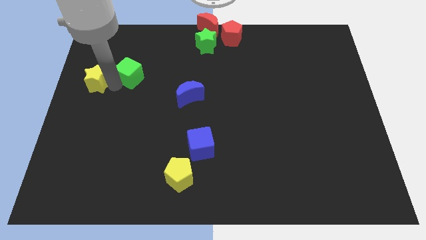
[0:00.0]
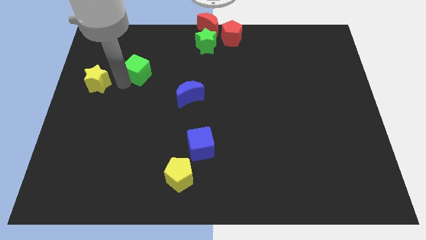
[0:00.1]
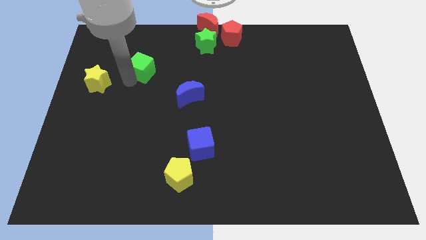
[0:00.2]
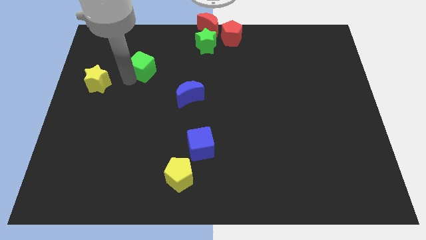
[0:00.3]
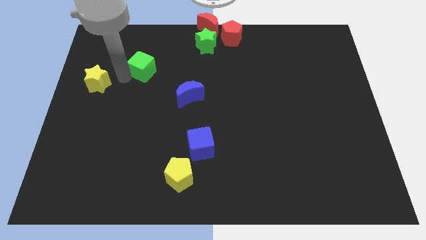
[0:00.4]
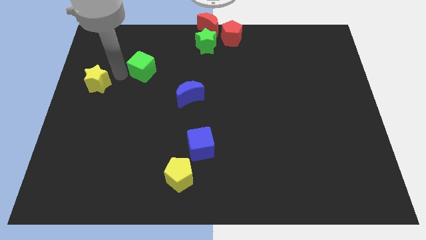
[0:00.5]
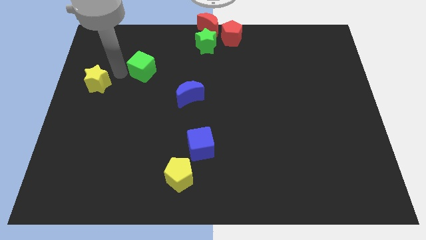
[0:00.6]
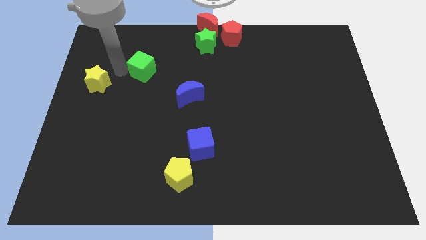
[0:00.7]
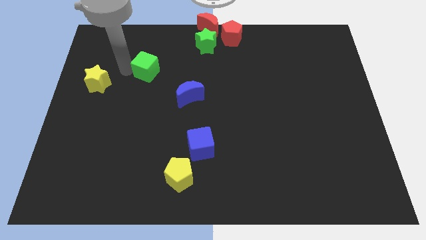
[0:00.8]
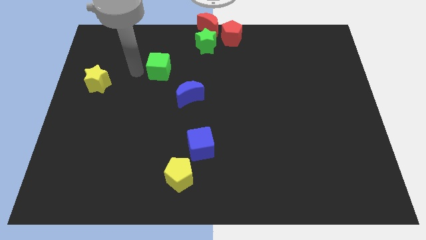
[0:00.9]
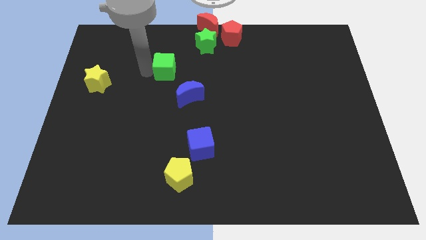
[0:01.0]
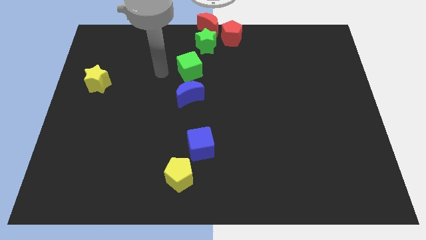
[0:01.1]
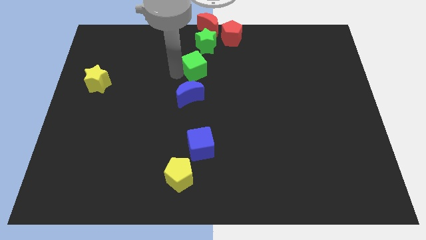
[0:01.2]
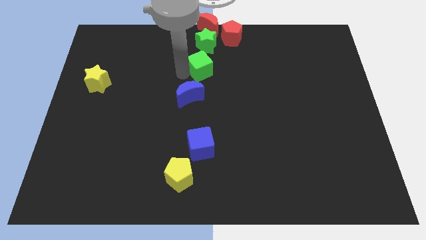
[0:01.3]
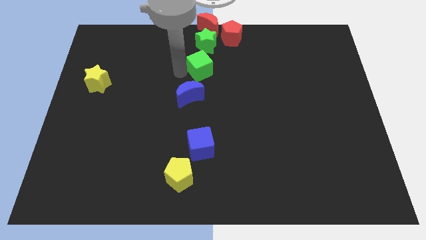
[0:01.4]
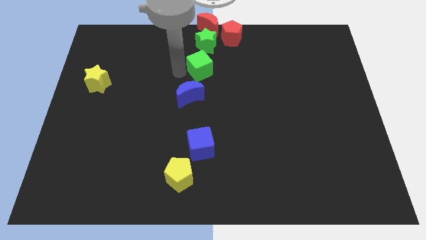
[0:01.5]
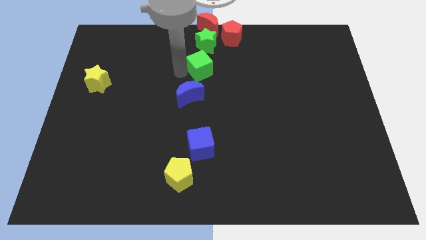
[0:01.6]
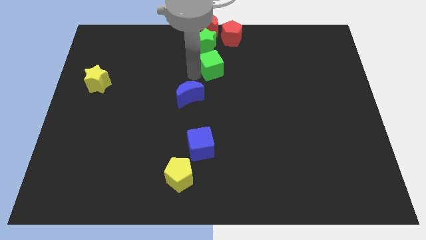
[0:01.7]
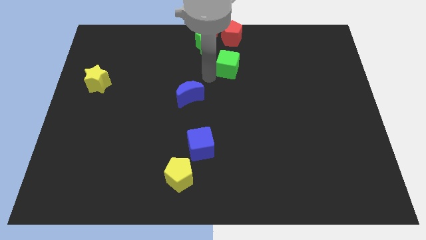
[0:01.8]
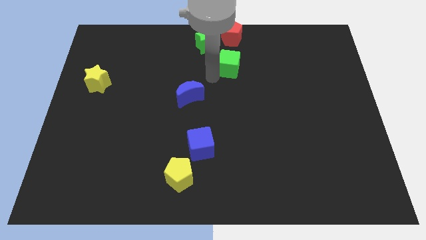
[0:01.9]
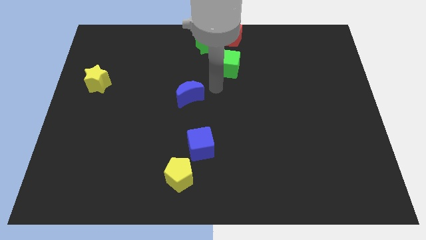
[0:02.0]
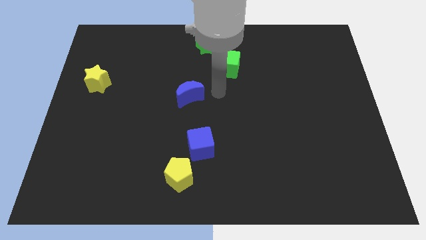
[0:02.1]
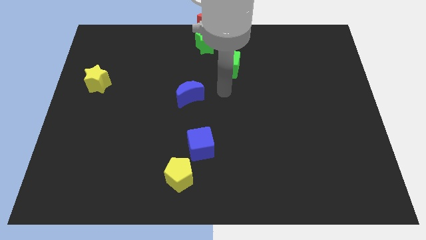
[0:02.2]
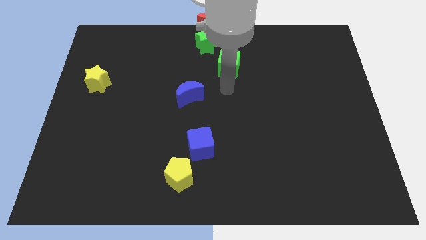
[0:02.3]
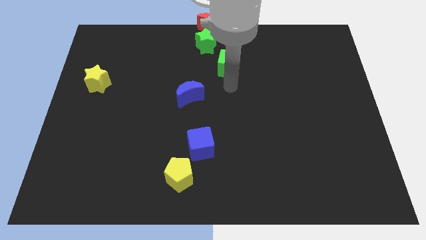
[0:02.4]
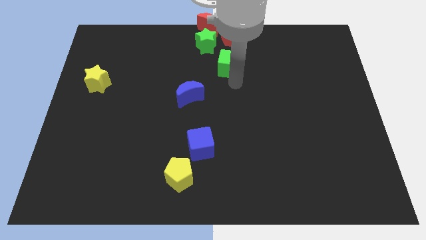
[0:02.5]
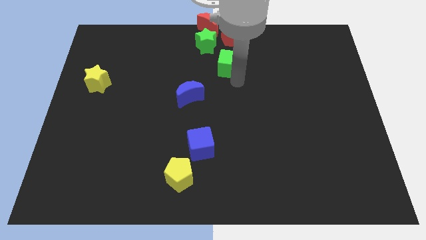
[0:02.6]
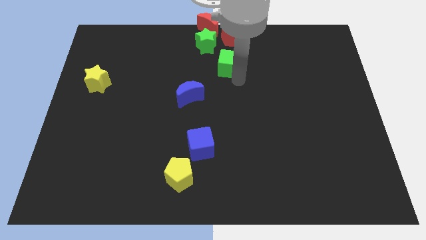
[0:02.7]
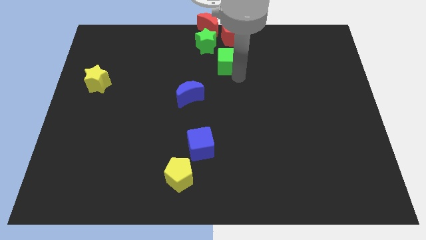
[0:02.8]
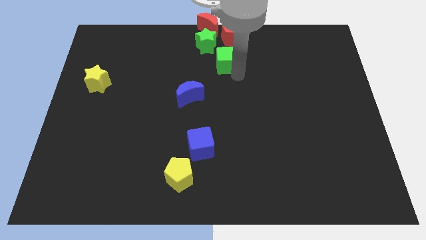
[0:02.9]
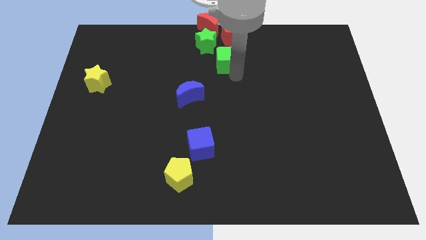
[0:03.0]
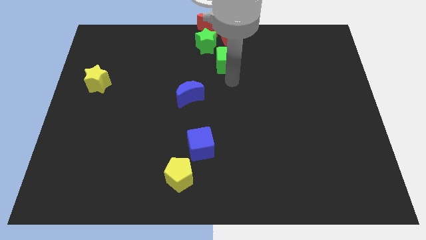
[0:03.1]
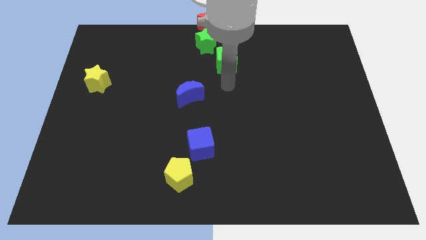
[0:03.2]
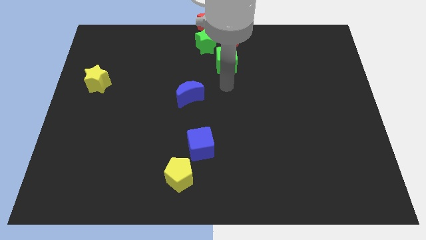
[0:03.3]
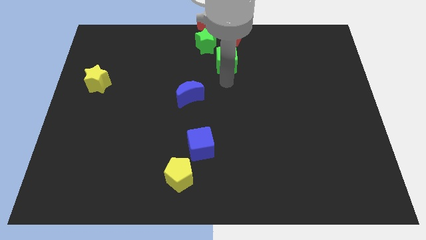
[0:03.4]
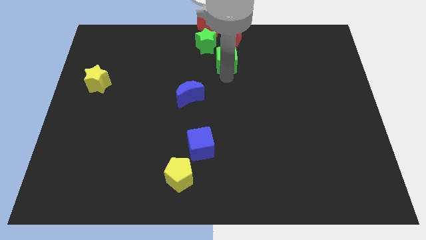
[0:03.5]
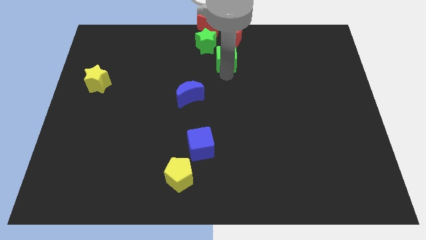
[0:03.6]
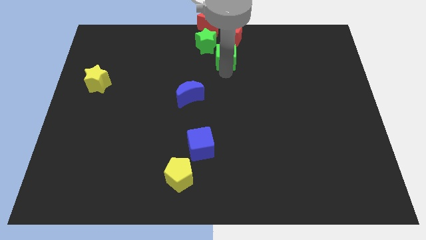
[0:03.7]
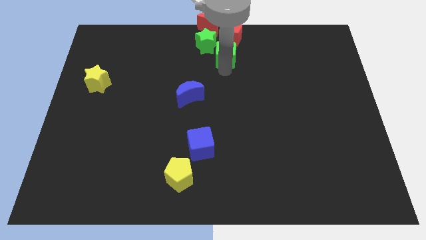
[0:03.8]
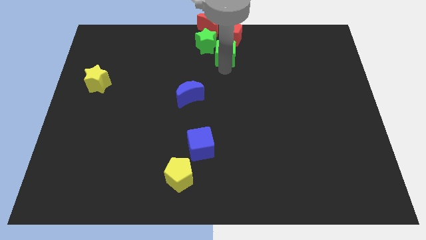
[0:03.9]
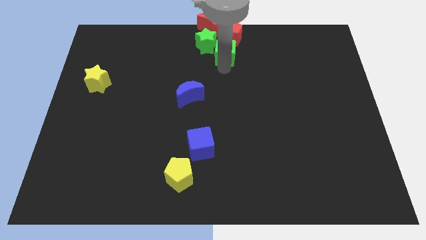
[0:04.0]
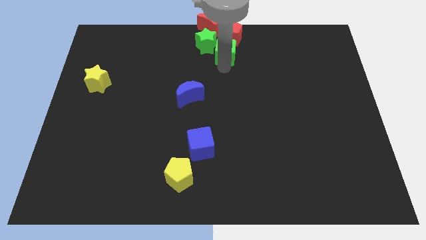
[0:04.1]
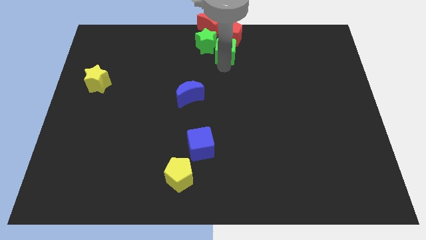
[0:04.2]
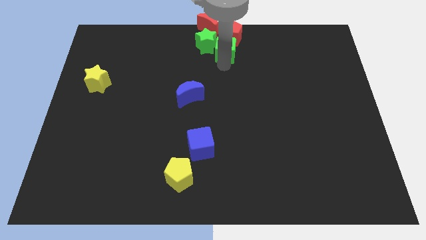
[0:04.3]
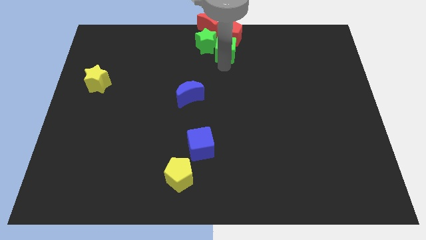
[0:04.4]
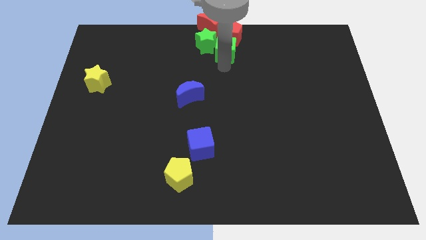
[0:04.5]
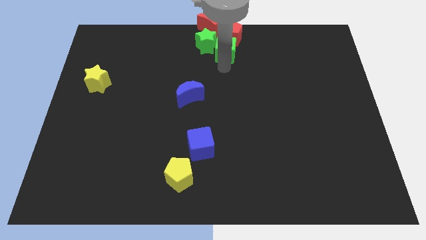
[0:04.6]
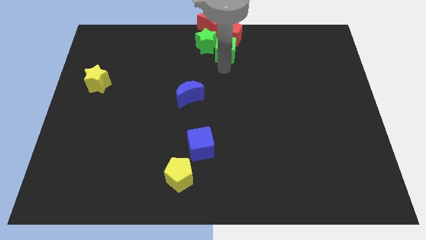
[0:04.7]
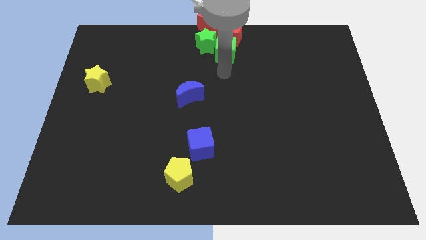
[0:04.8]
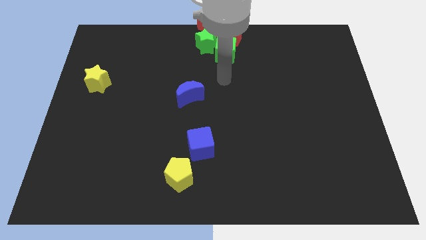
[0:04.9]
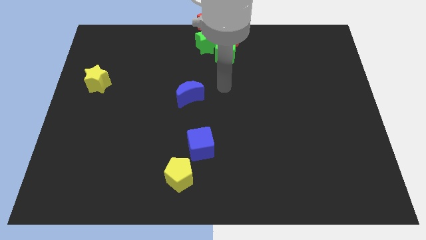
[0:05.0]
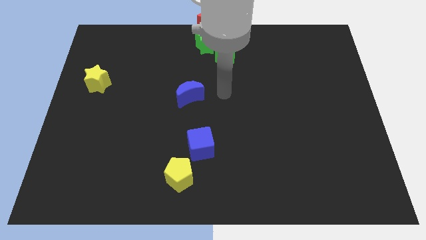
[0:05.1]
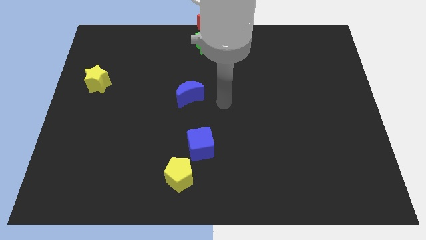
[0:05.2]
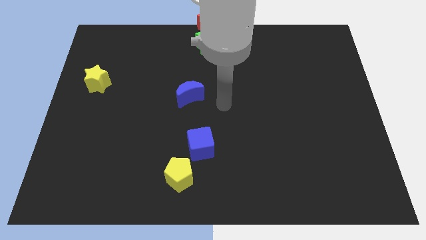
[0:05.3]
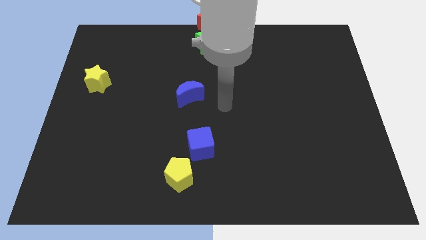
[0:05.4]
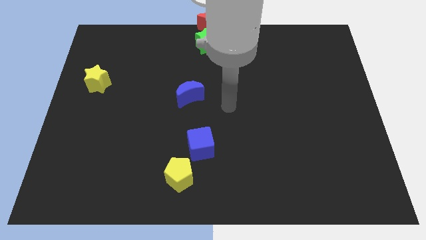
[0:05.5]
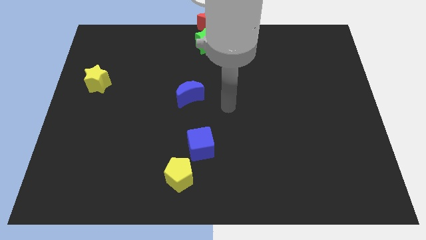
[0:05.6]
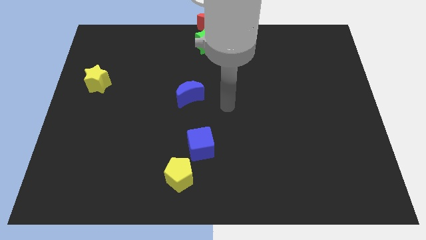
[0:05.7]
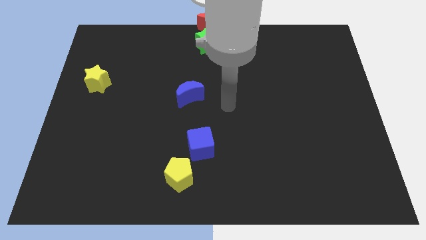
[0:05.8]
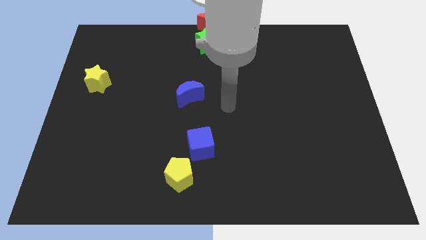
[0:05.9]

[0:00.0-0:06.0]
move the green cube under to the red pentagon

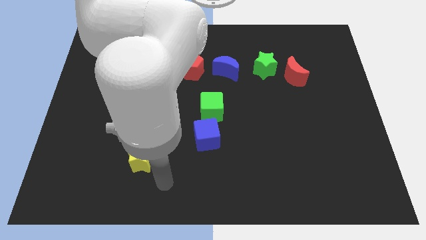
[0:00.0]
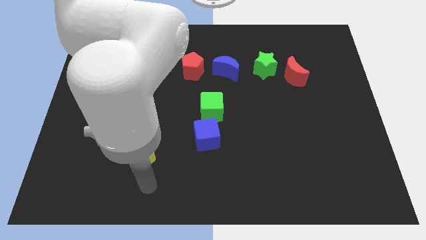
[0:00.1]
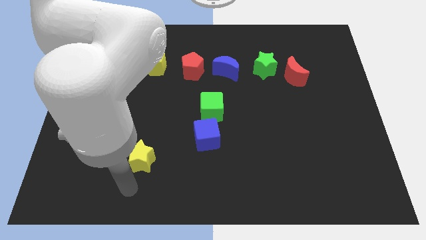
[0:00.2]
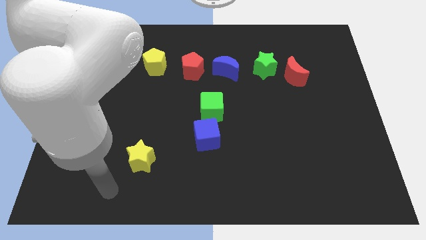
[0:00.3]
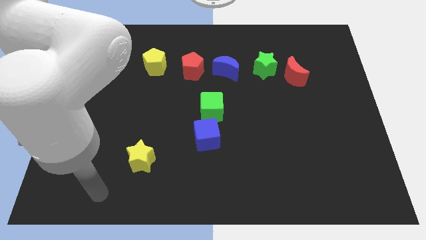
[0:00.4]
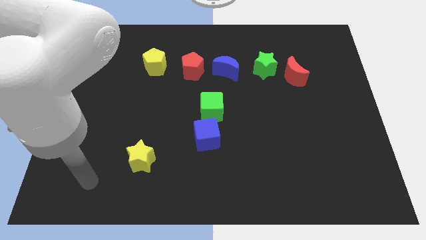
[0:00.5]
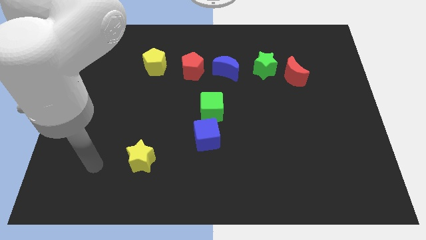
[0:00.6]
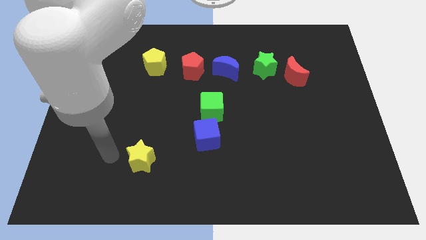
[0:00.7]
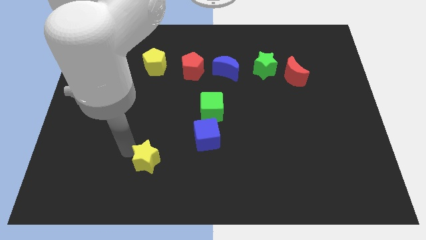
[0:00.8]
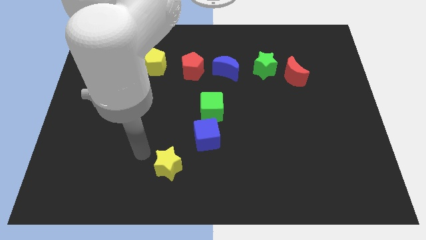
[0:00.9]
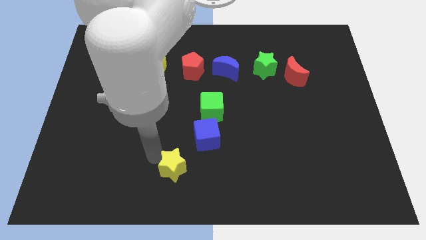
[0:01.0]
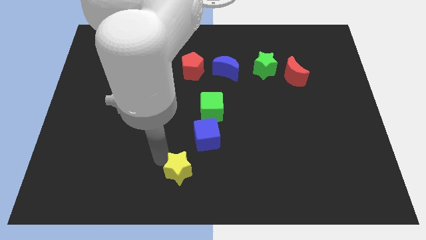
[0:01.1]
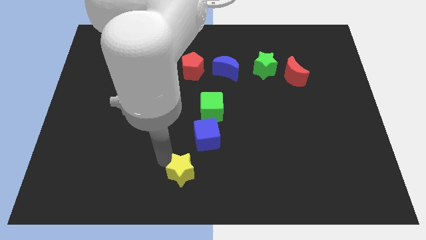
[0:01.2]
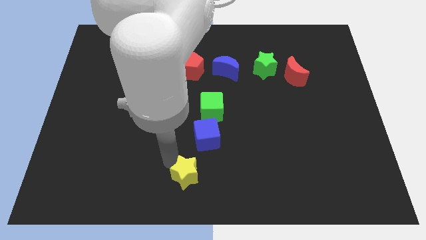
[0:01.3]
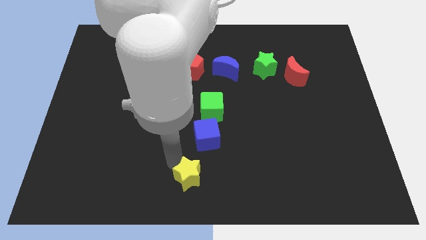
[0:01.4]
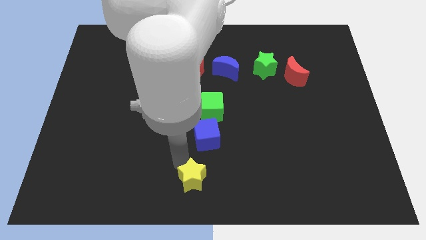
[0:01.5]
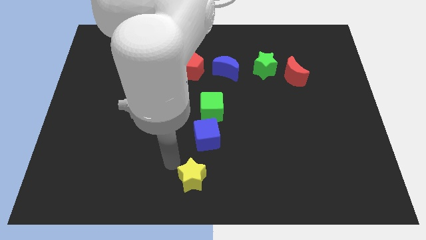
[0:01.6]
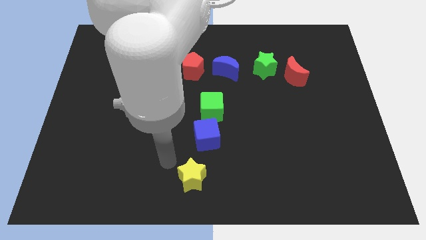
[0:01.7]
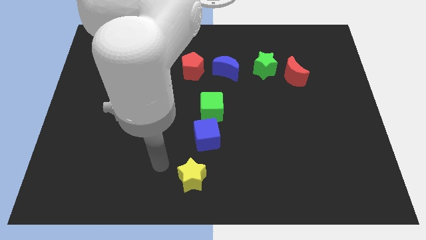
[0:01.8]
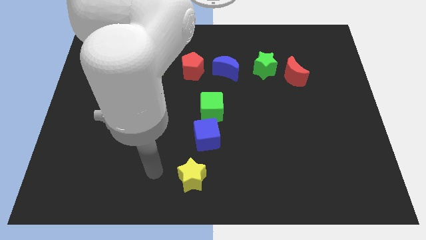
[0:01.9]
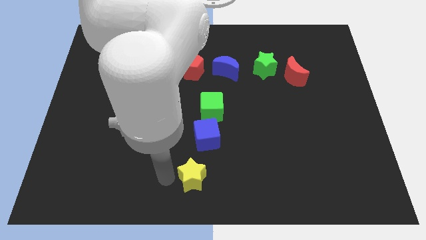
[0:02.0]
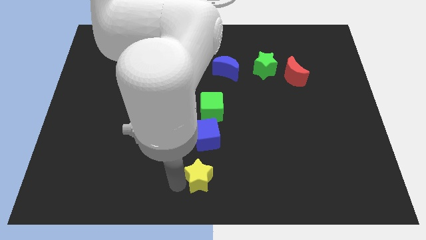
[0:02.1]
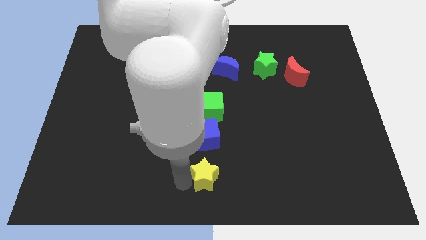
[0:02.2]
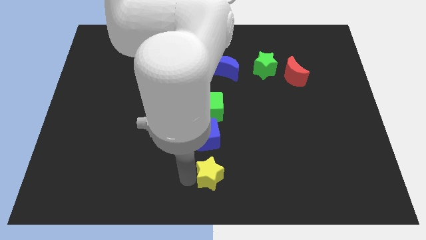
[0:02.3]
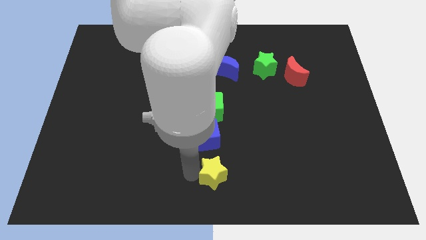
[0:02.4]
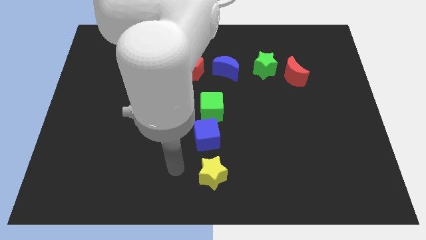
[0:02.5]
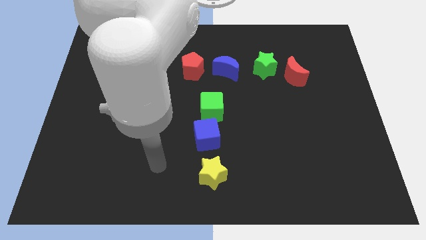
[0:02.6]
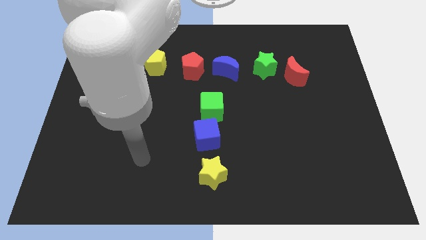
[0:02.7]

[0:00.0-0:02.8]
move the yellow star below the blue cube

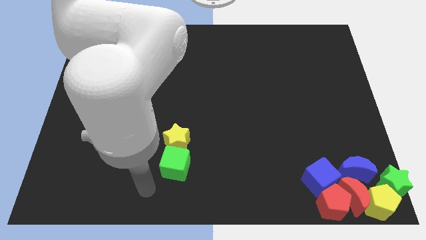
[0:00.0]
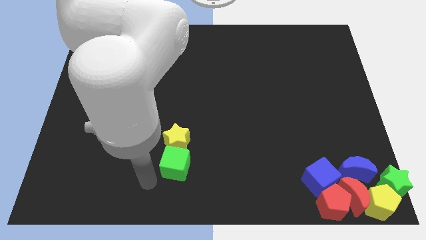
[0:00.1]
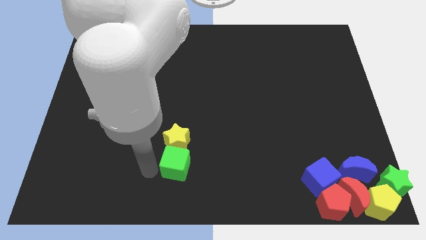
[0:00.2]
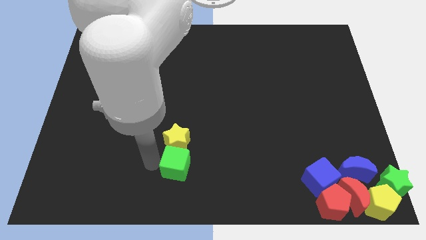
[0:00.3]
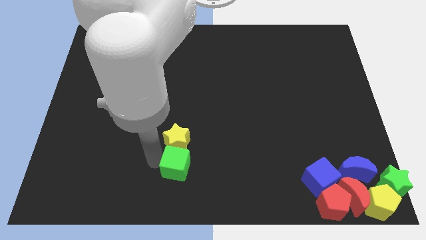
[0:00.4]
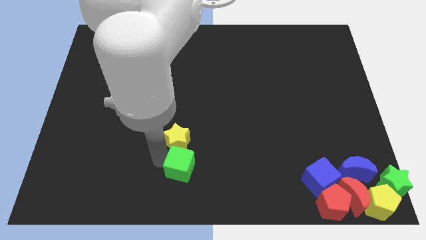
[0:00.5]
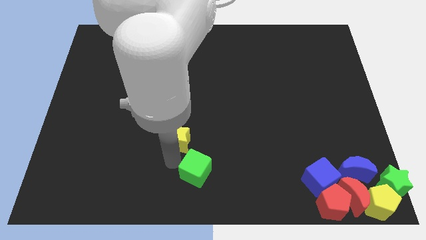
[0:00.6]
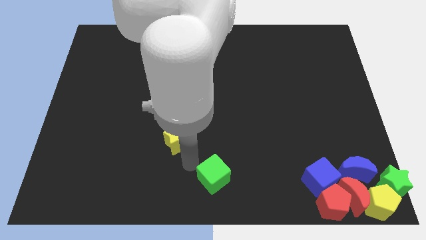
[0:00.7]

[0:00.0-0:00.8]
separate the green cube from the yellow star
